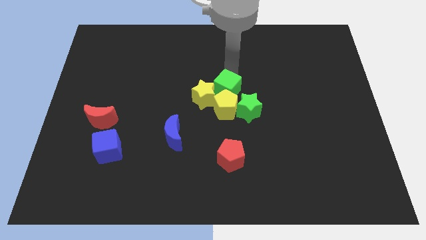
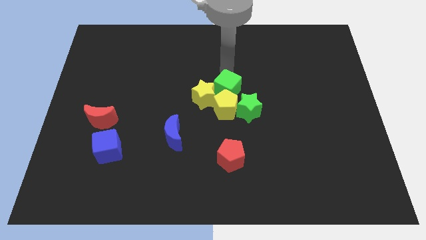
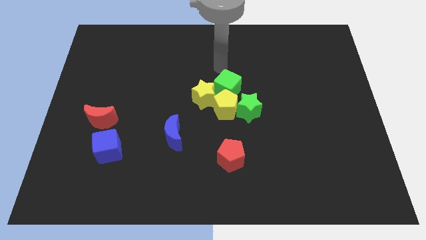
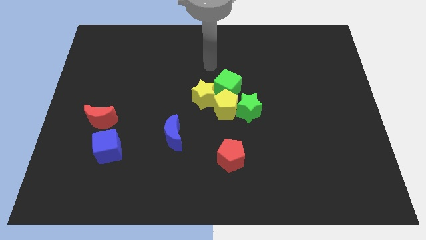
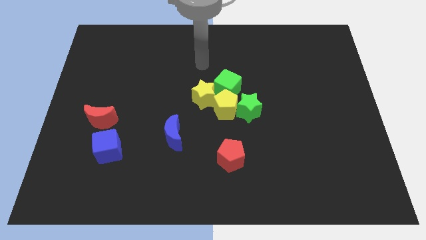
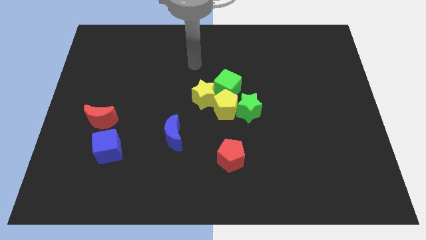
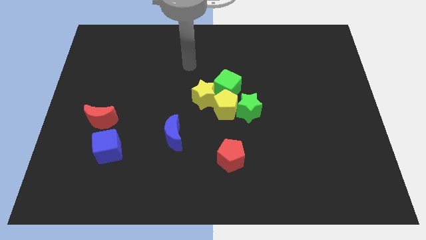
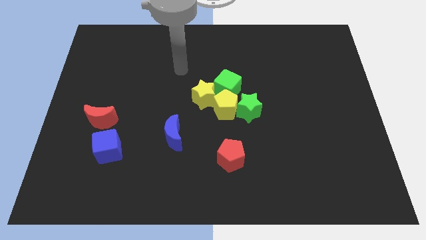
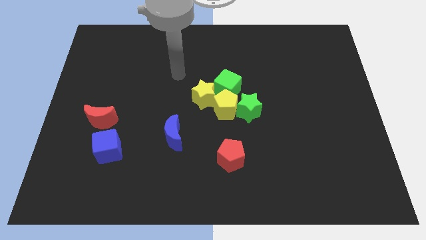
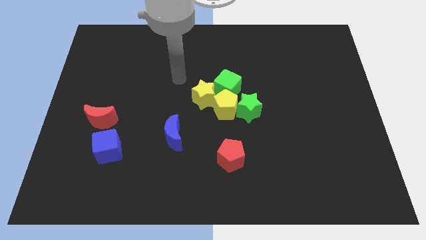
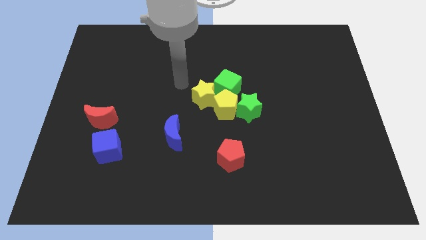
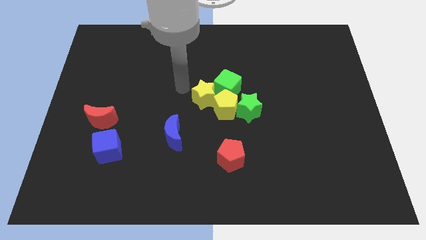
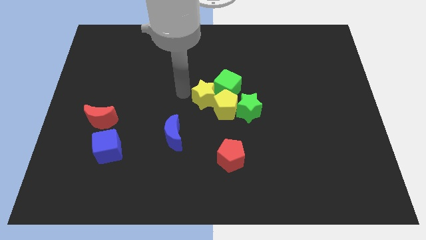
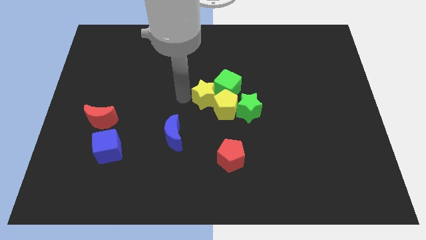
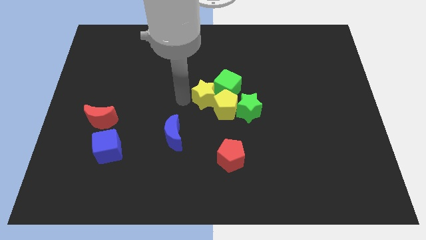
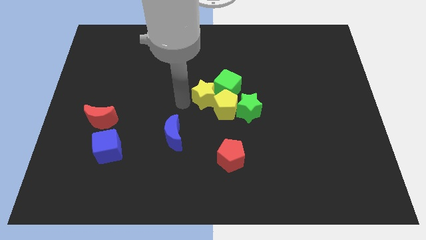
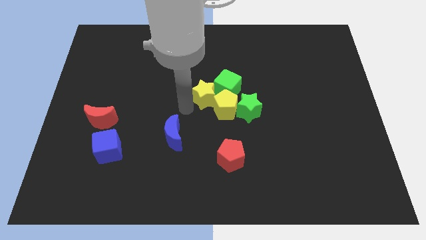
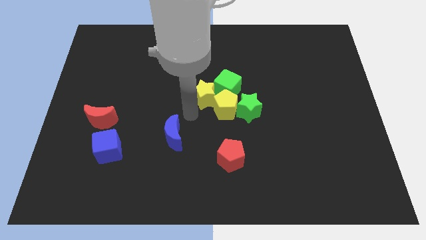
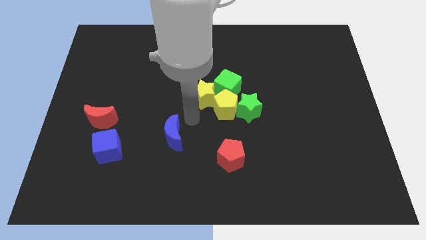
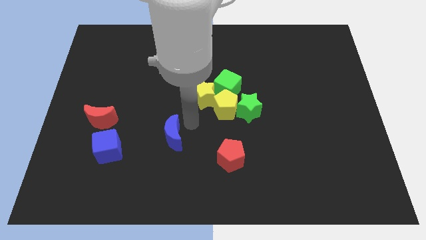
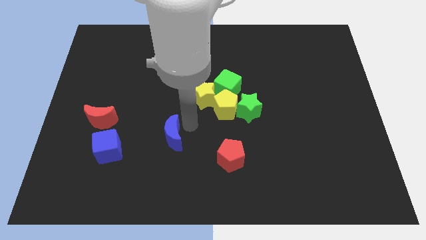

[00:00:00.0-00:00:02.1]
point your arm between yellow blocks and blue moon

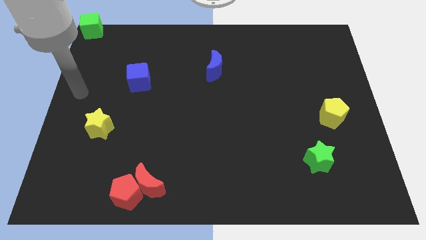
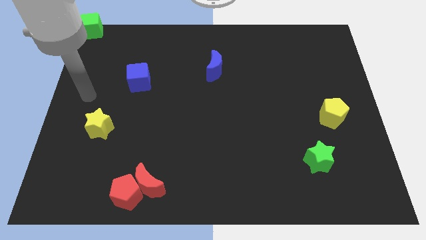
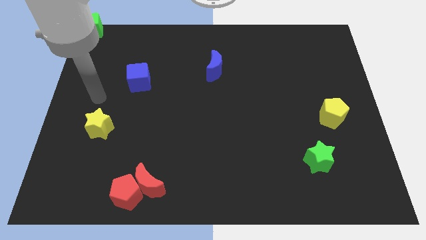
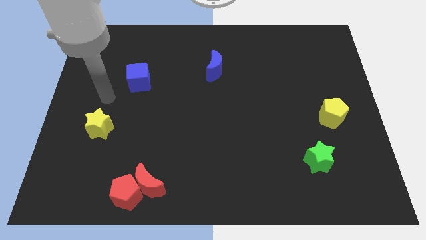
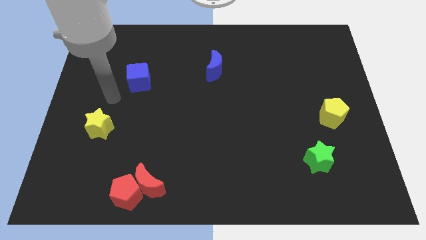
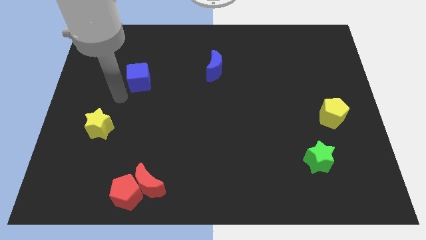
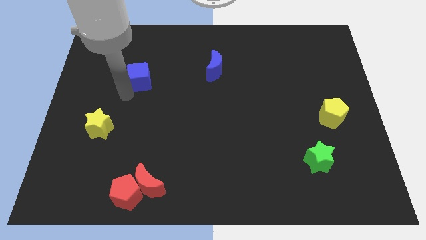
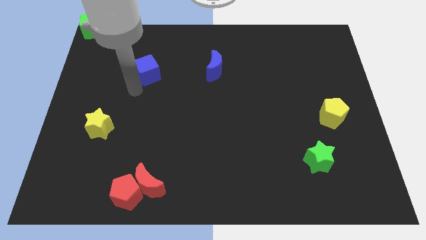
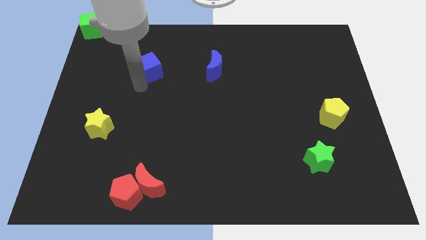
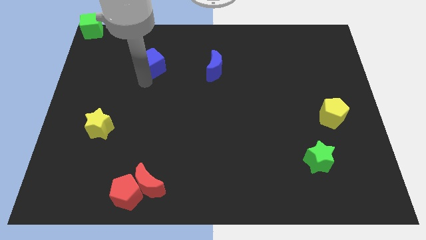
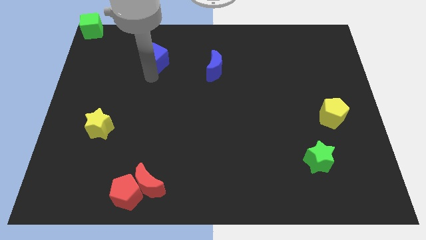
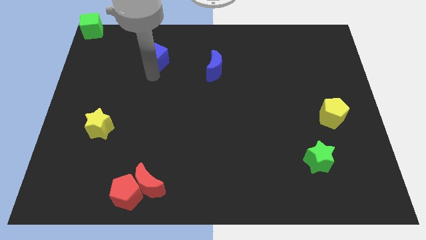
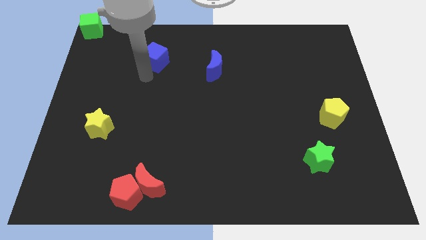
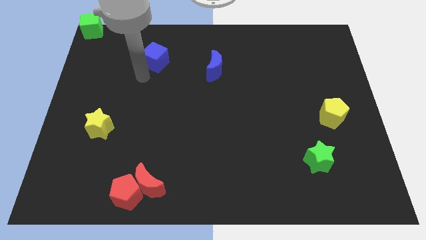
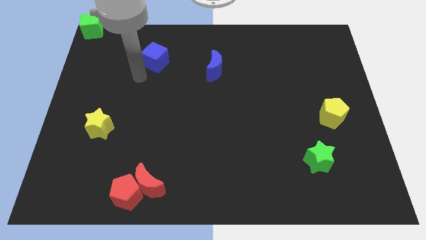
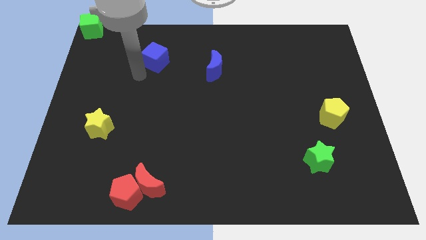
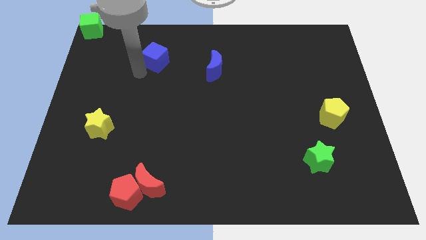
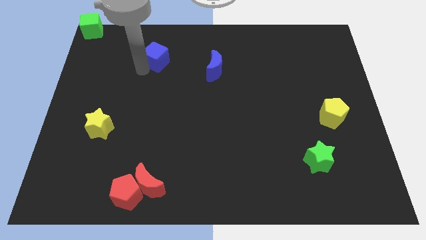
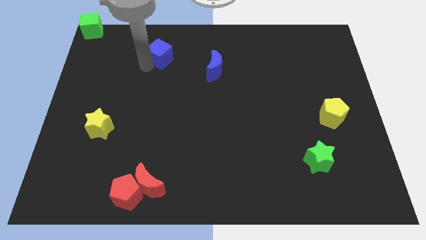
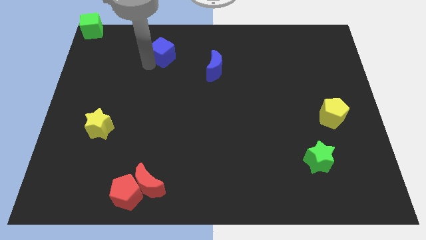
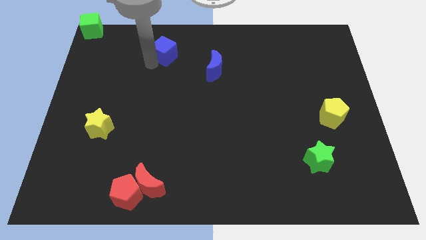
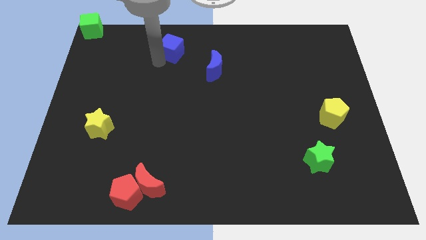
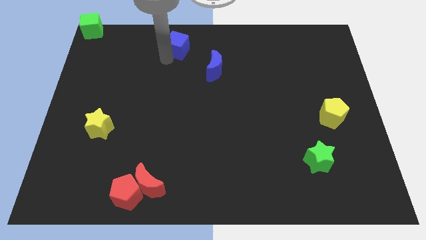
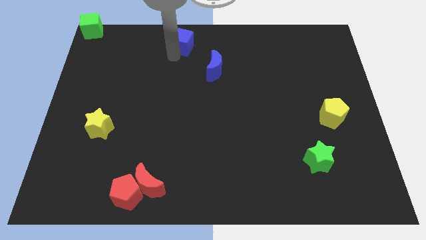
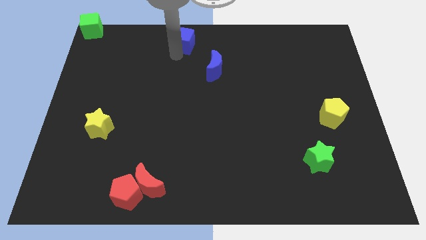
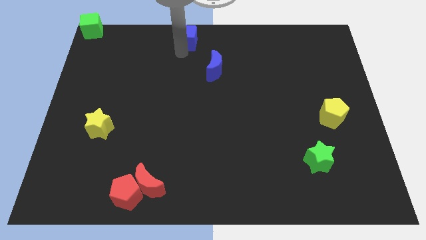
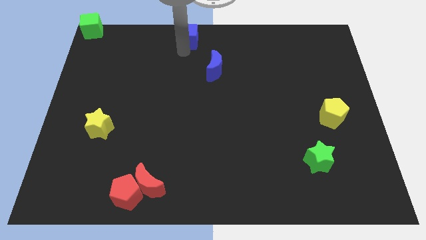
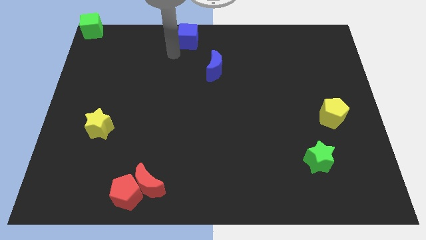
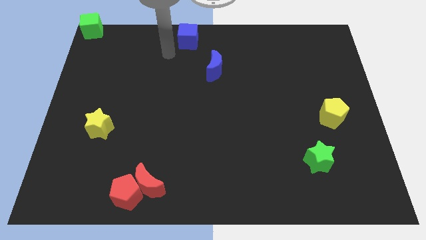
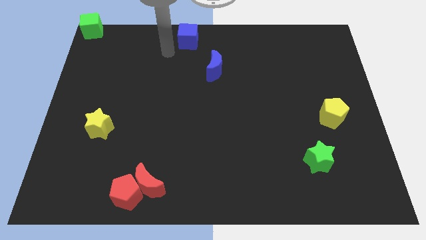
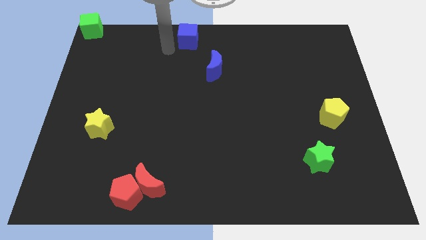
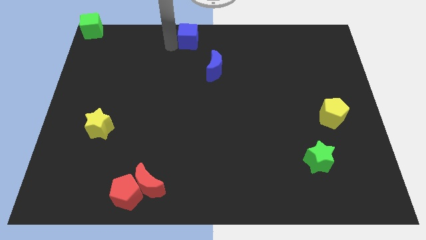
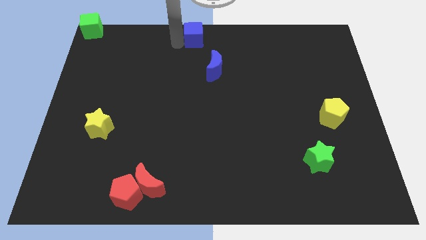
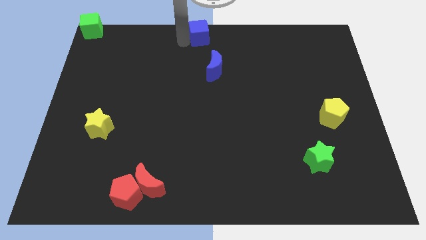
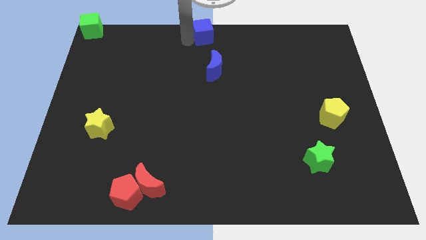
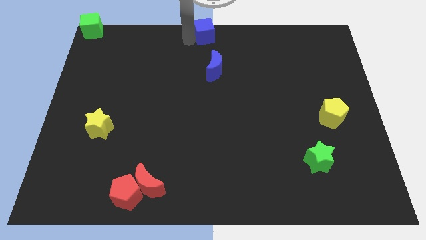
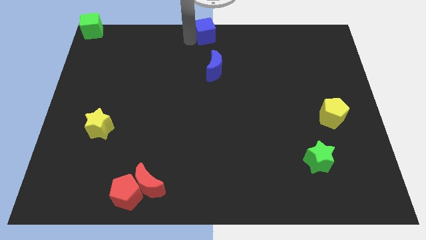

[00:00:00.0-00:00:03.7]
move blue cube at the top center

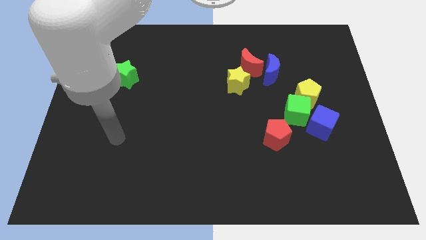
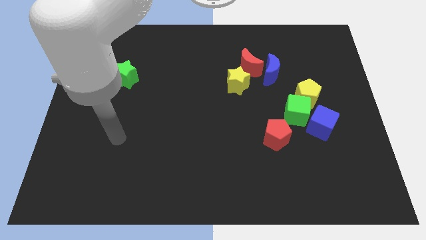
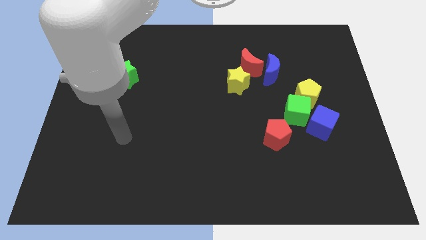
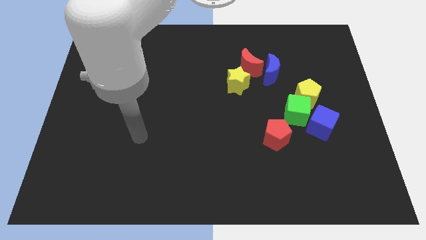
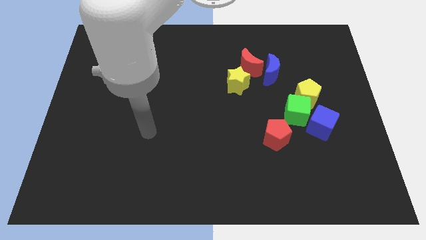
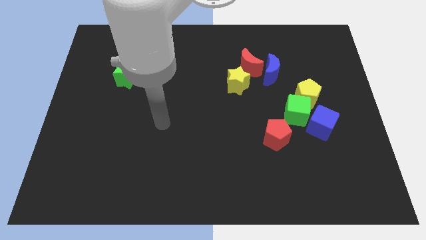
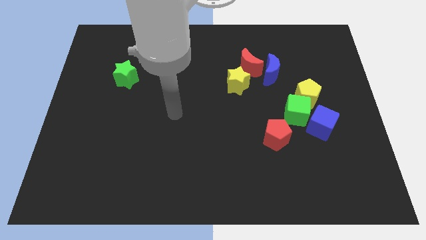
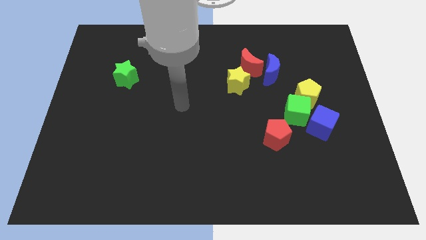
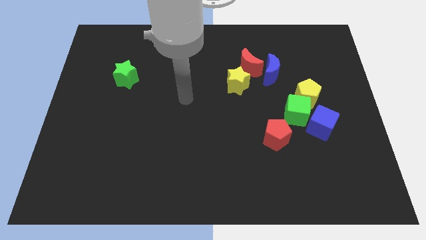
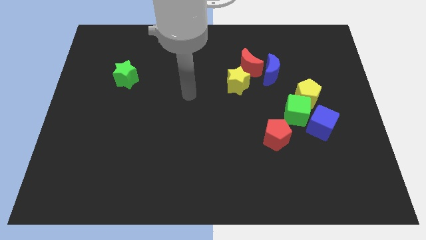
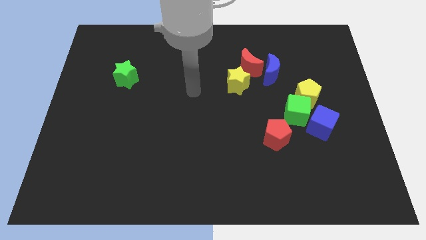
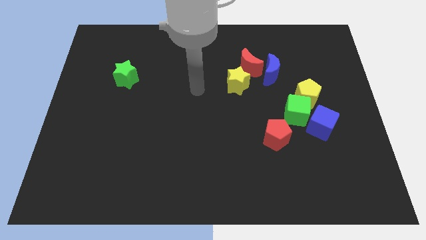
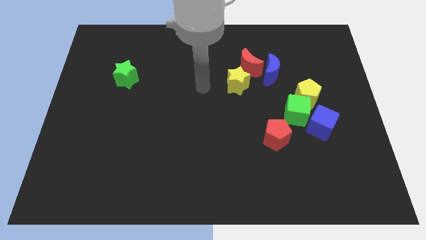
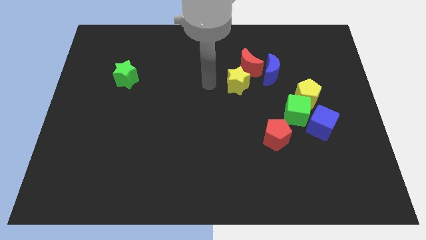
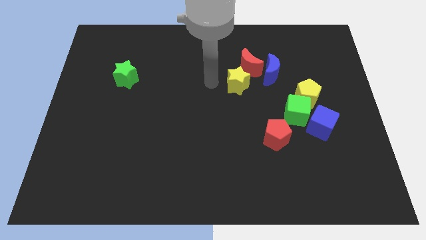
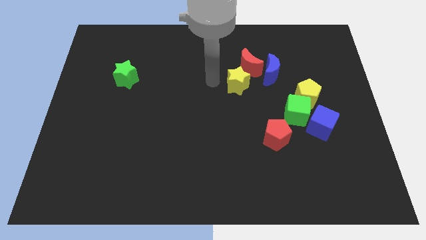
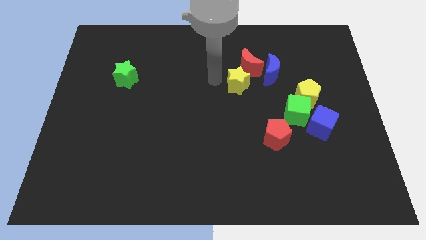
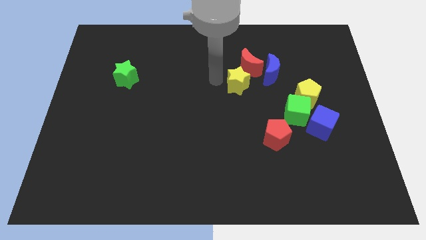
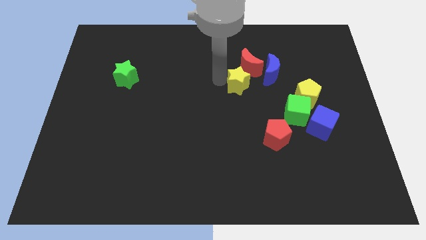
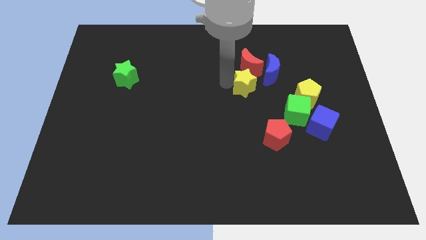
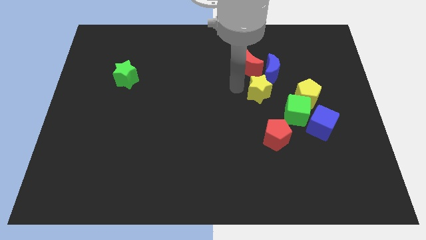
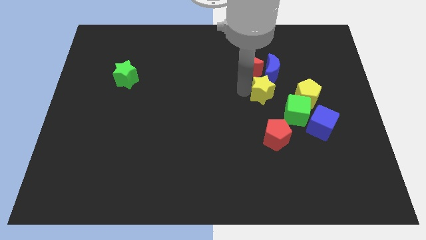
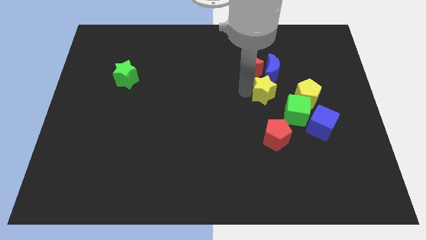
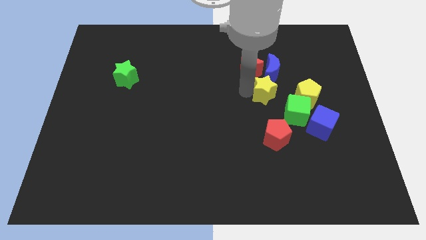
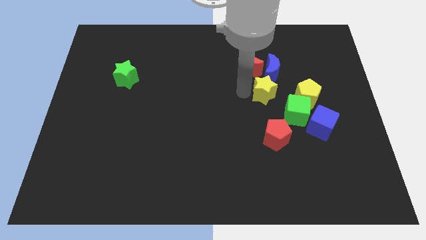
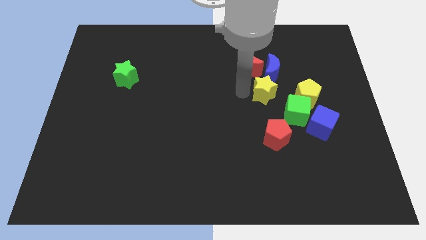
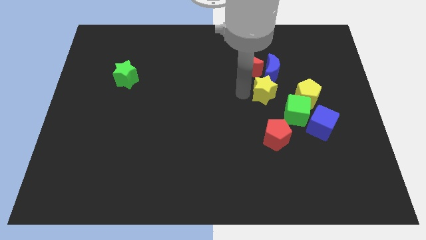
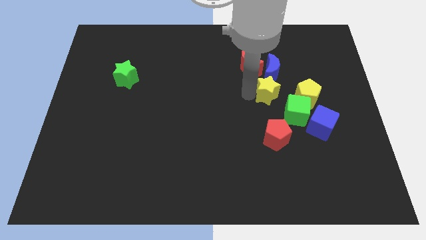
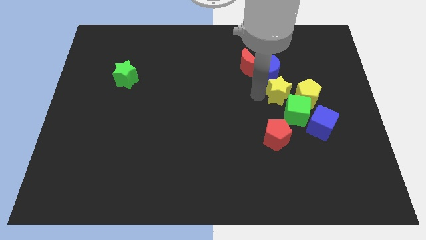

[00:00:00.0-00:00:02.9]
push the yellow star close to the left of the yellow pentagon

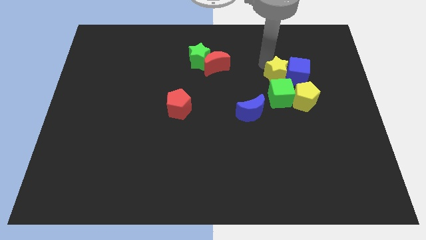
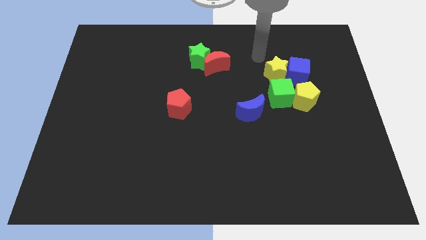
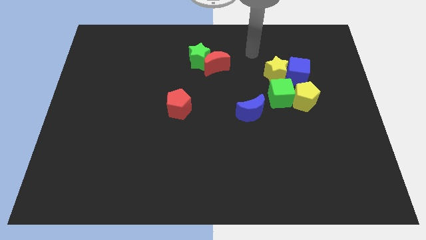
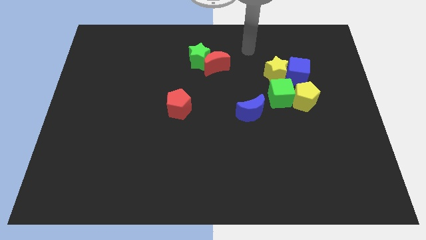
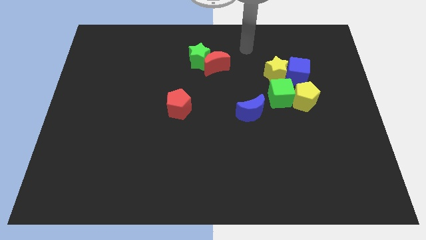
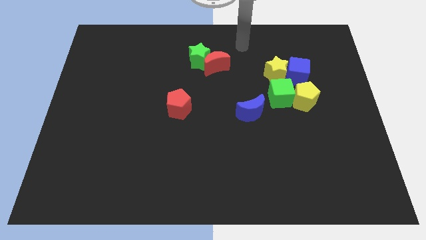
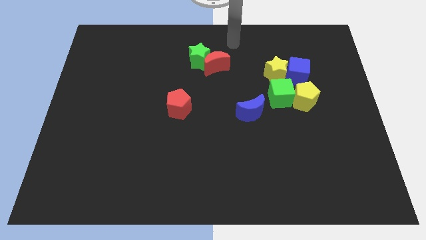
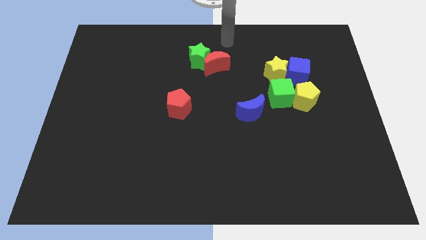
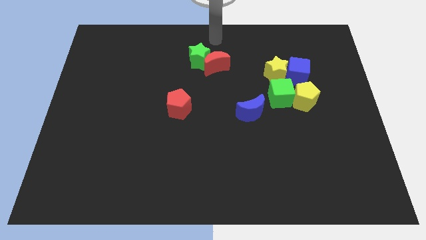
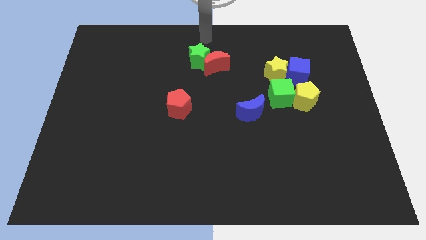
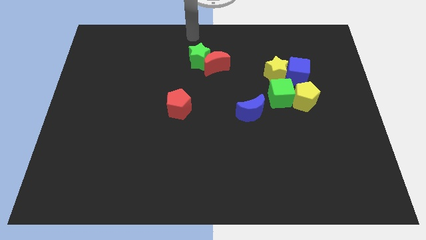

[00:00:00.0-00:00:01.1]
place your hand to the top center of the board
